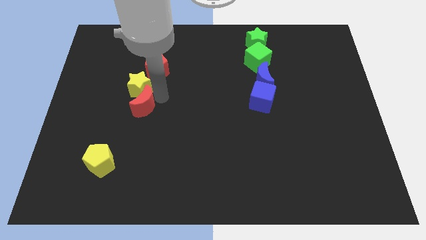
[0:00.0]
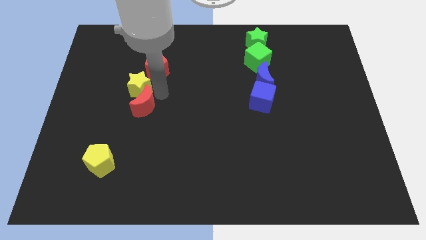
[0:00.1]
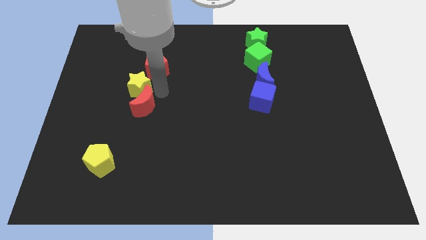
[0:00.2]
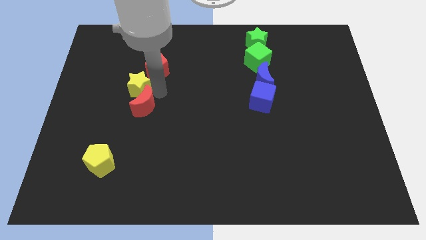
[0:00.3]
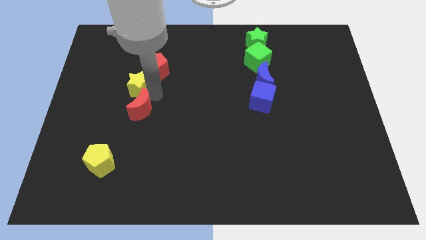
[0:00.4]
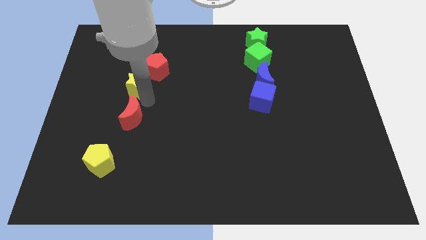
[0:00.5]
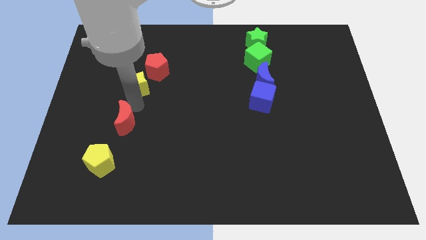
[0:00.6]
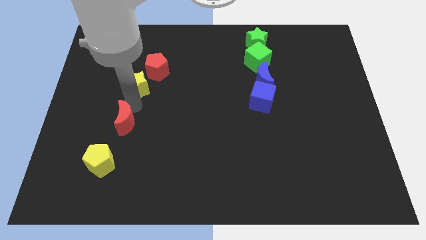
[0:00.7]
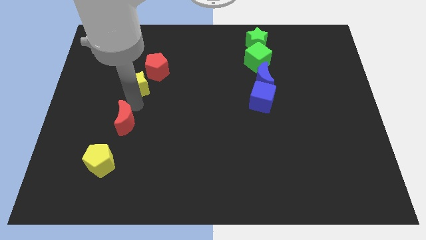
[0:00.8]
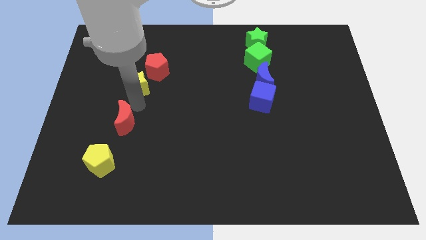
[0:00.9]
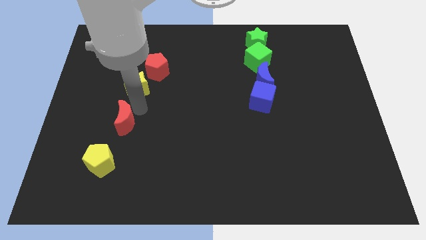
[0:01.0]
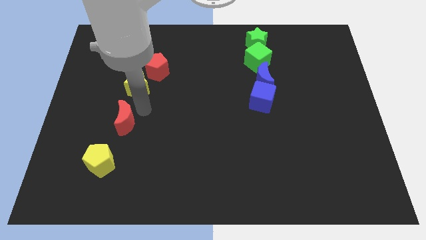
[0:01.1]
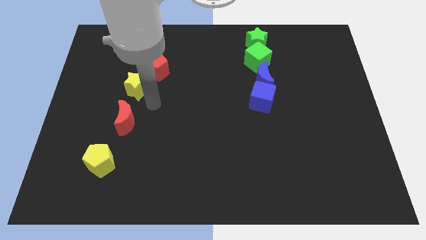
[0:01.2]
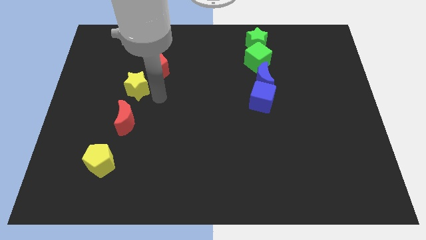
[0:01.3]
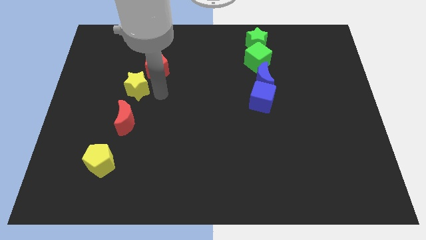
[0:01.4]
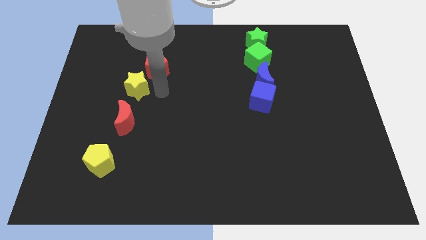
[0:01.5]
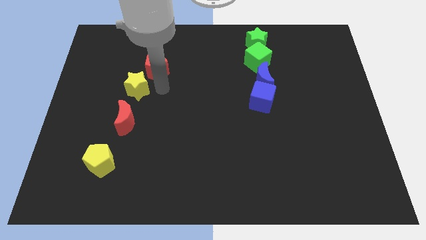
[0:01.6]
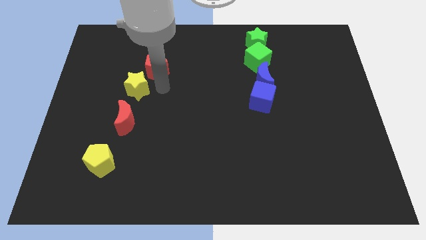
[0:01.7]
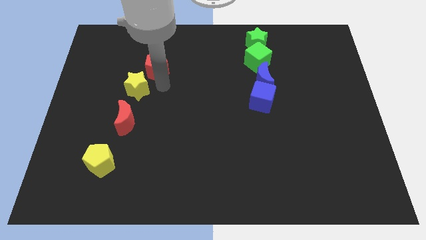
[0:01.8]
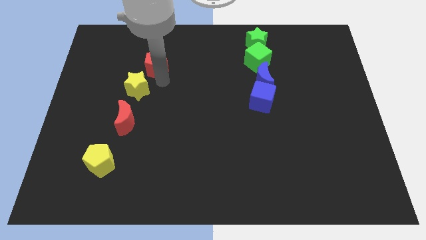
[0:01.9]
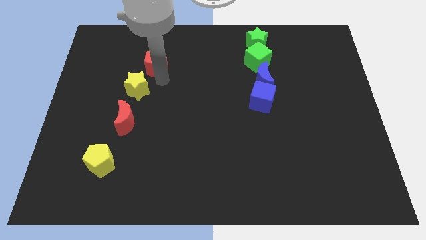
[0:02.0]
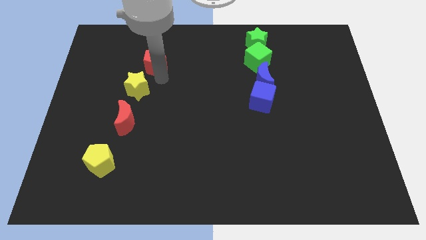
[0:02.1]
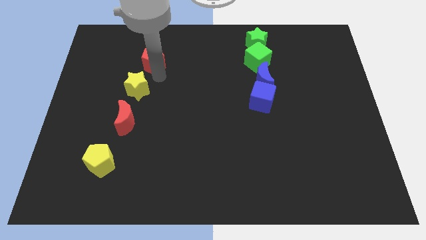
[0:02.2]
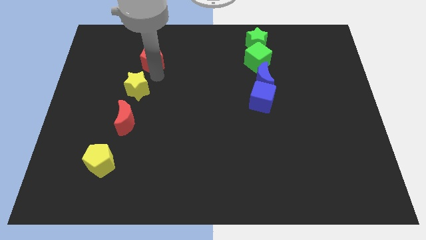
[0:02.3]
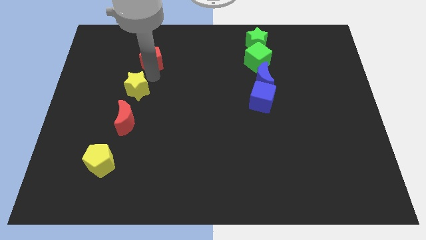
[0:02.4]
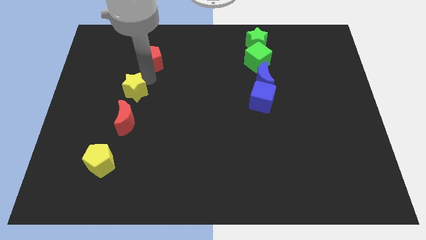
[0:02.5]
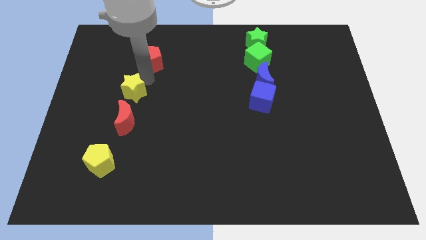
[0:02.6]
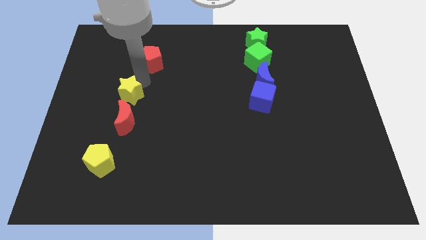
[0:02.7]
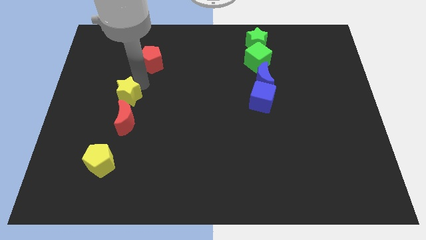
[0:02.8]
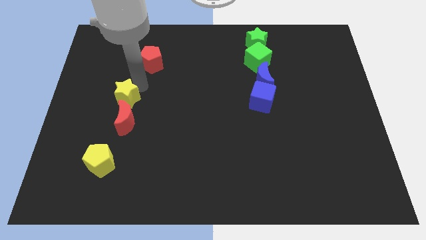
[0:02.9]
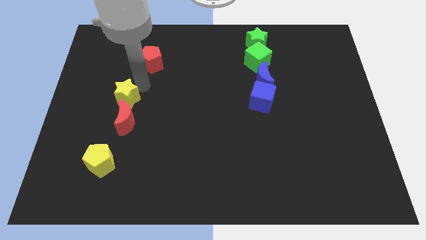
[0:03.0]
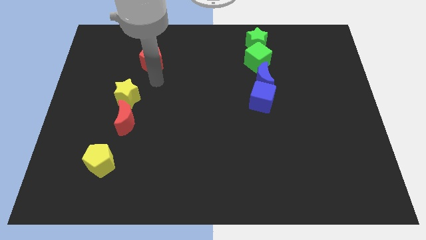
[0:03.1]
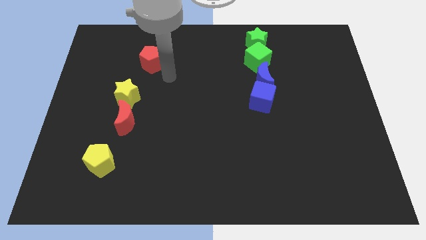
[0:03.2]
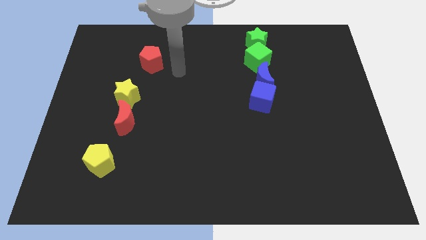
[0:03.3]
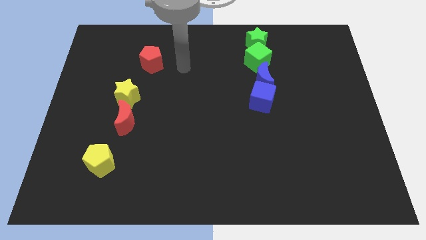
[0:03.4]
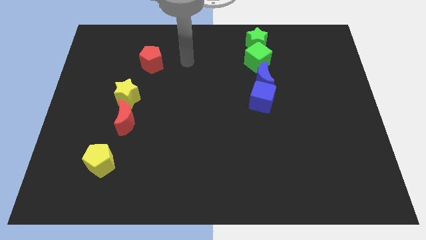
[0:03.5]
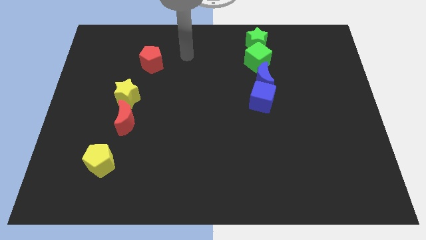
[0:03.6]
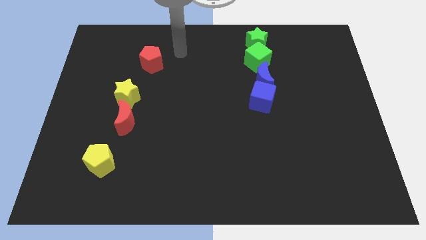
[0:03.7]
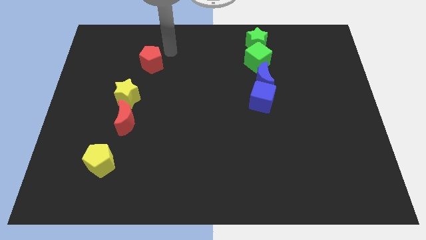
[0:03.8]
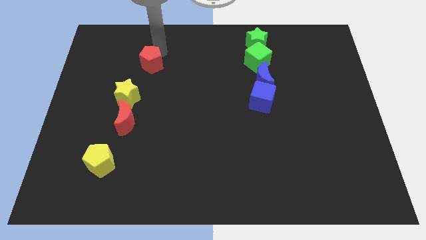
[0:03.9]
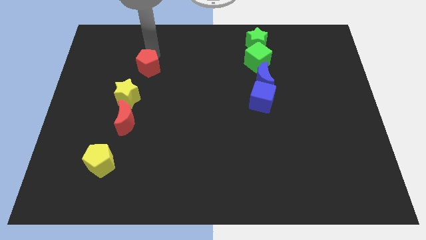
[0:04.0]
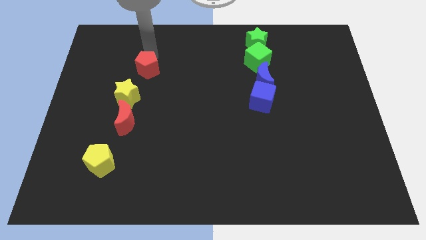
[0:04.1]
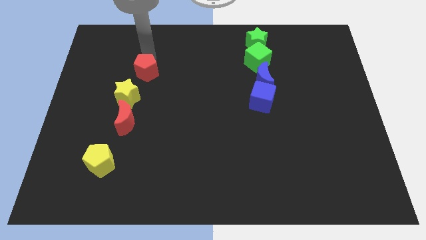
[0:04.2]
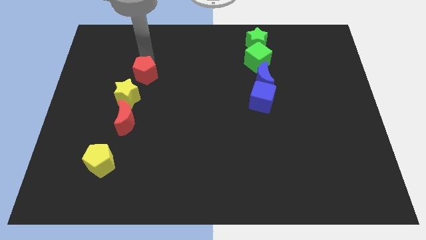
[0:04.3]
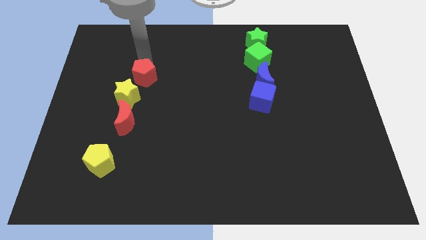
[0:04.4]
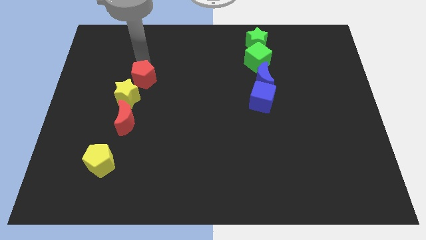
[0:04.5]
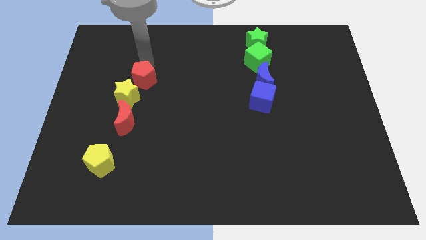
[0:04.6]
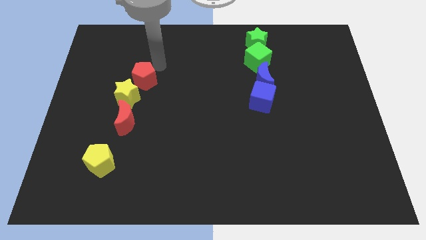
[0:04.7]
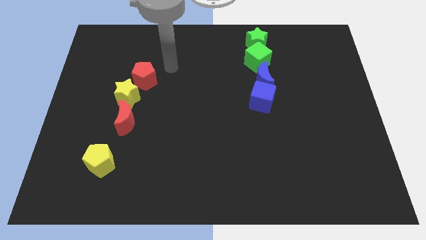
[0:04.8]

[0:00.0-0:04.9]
place the red blocks and the yellow star in a vertical line

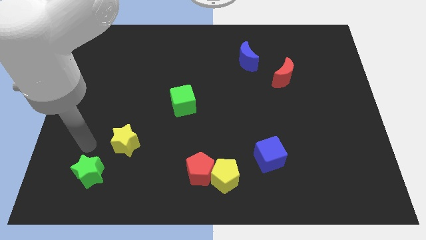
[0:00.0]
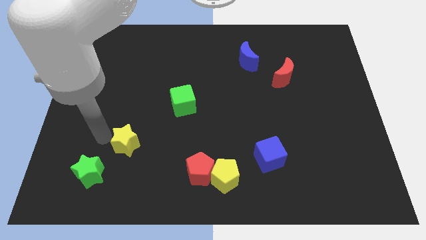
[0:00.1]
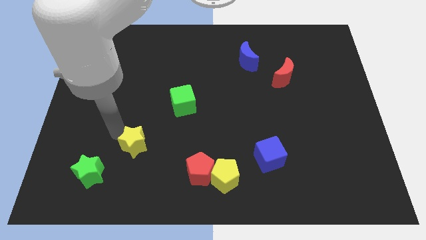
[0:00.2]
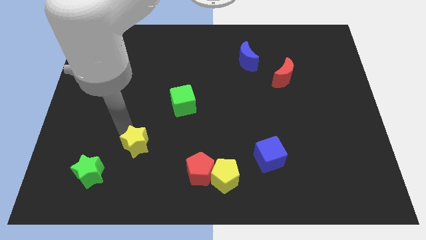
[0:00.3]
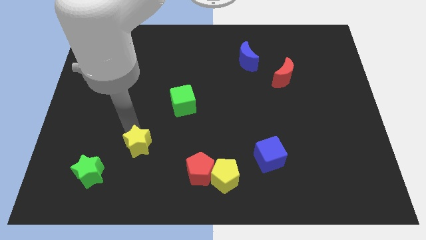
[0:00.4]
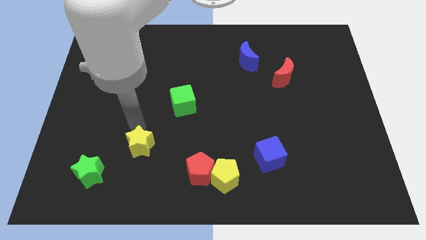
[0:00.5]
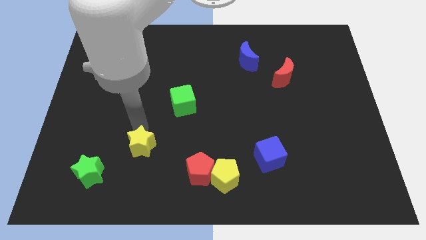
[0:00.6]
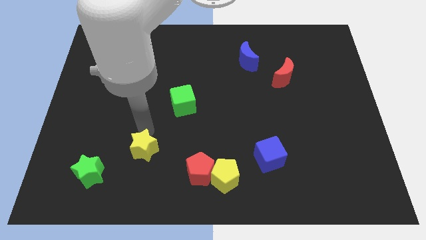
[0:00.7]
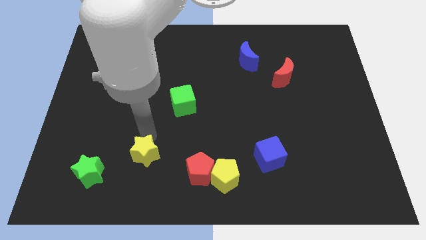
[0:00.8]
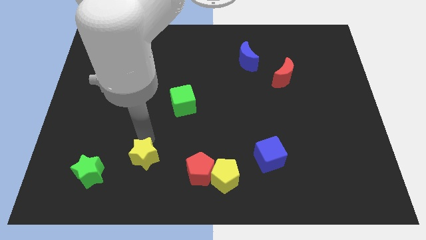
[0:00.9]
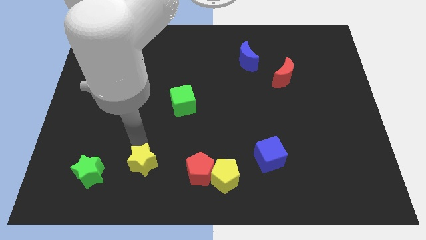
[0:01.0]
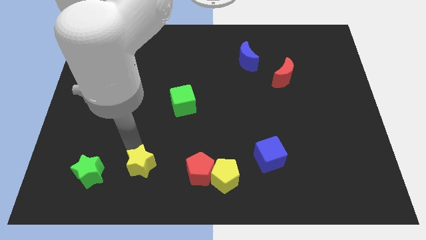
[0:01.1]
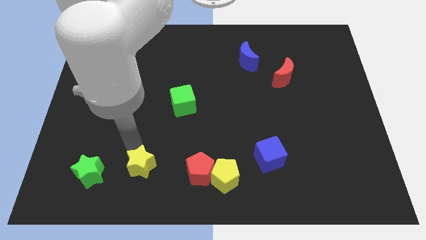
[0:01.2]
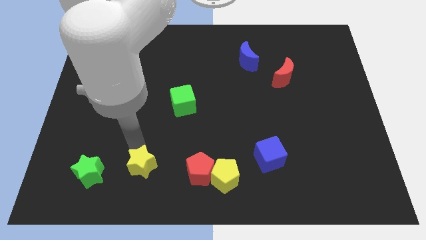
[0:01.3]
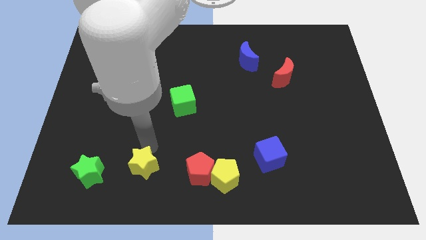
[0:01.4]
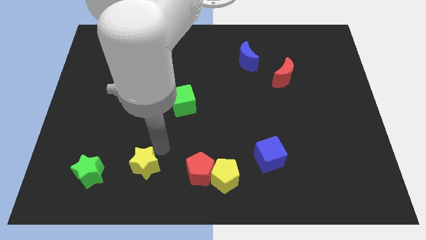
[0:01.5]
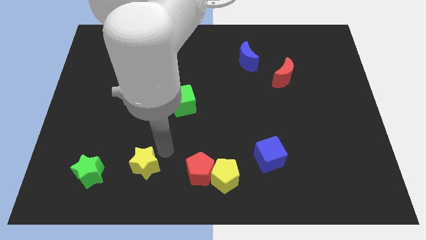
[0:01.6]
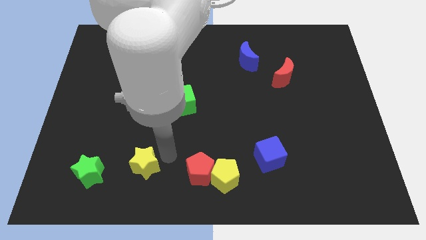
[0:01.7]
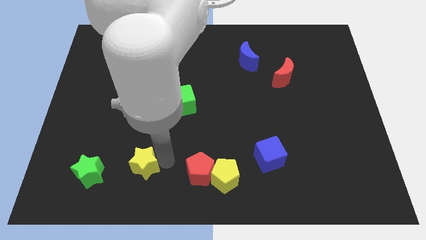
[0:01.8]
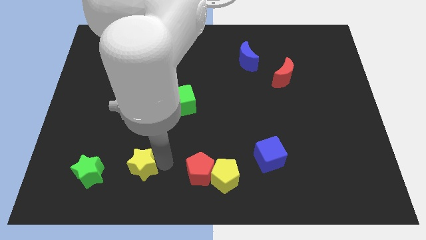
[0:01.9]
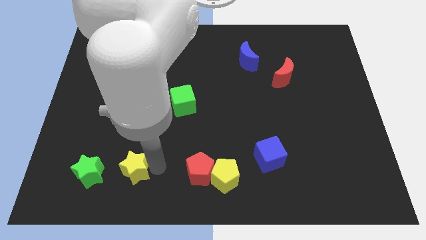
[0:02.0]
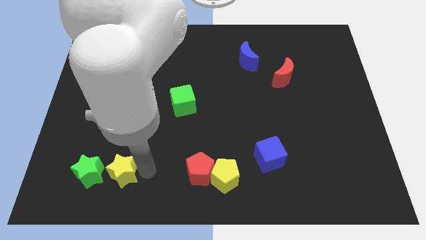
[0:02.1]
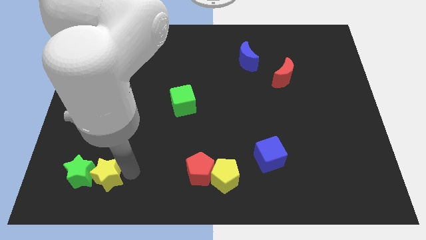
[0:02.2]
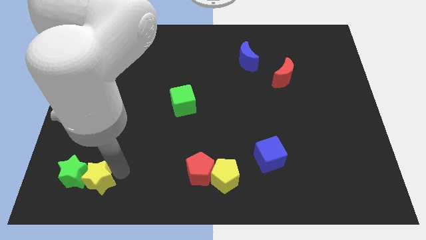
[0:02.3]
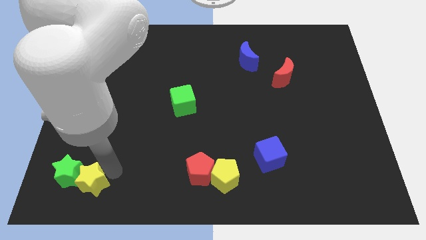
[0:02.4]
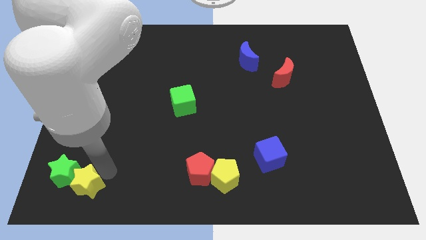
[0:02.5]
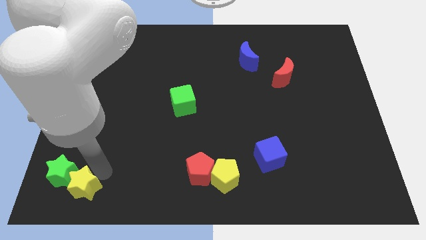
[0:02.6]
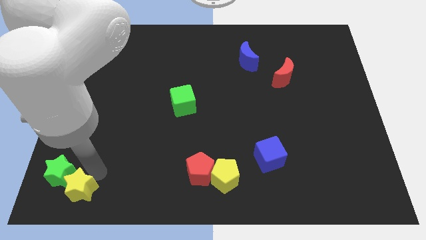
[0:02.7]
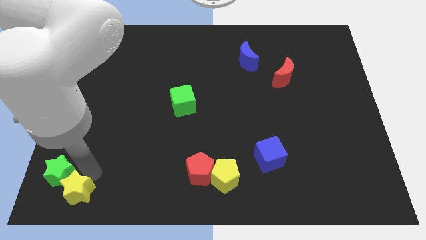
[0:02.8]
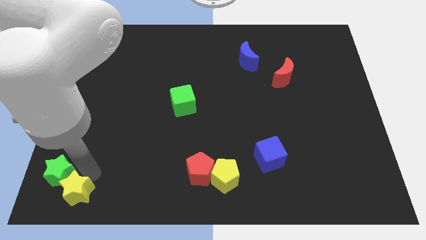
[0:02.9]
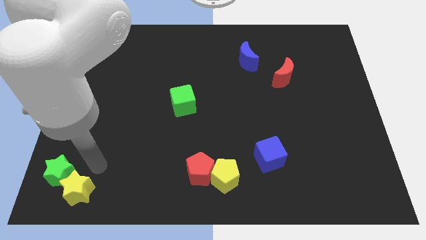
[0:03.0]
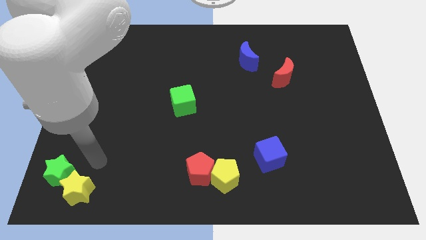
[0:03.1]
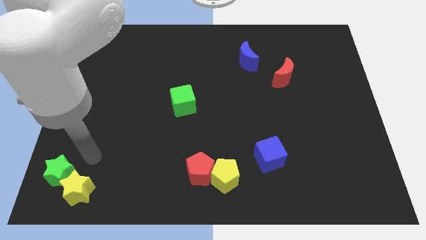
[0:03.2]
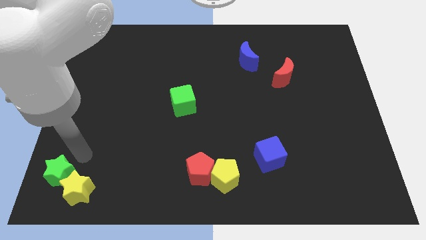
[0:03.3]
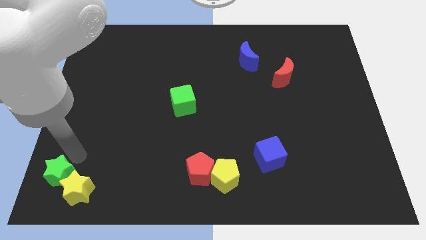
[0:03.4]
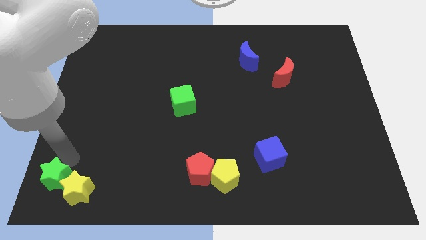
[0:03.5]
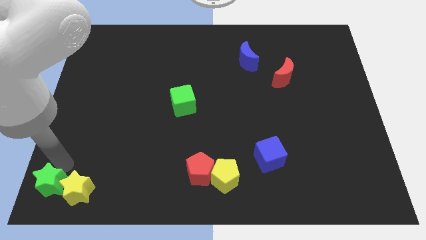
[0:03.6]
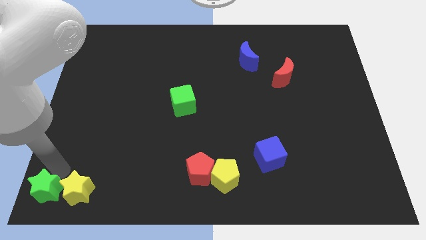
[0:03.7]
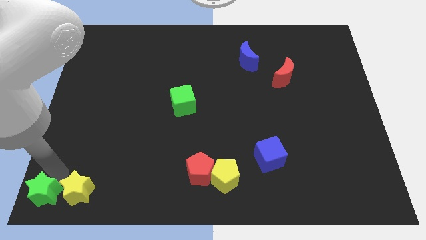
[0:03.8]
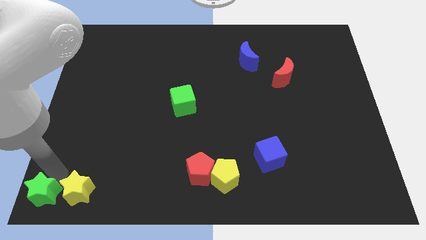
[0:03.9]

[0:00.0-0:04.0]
place the green star and yellow star to the bottom left corner of the board

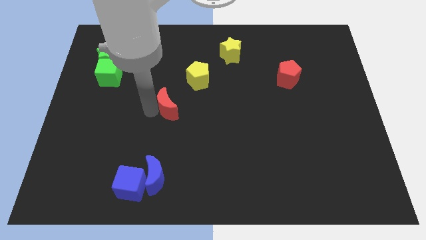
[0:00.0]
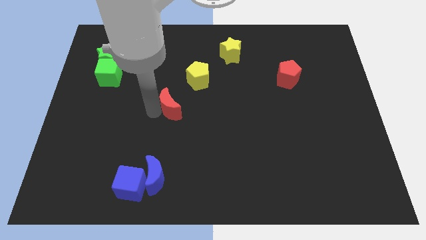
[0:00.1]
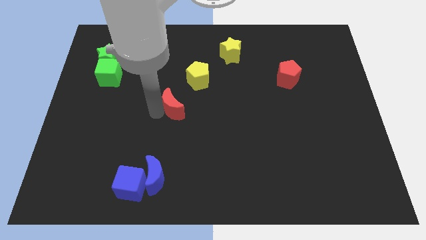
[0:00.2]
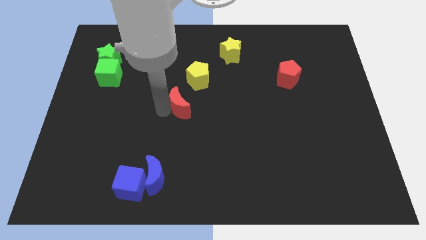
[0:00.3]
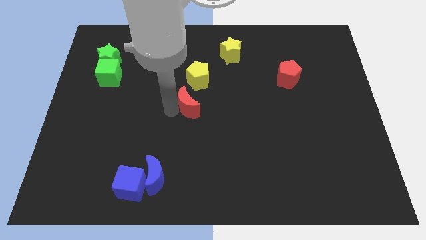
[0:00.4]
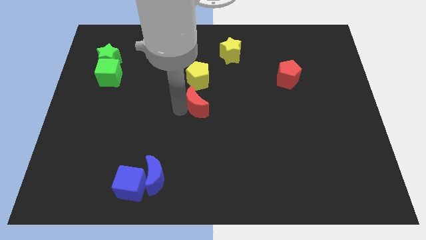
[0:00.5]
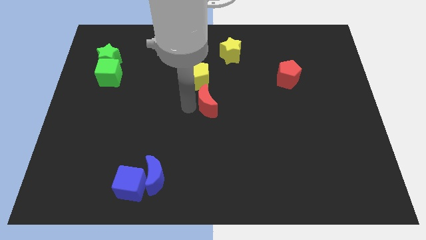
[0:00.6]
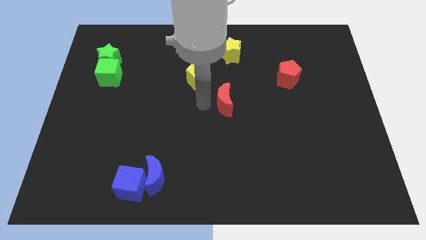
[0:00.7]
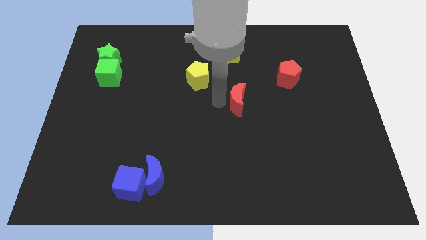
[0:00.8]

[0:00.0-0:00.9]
move the red crescent to the bottom of the yellow star
